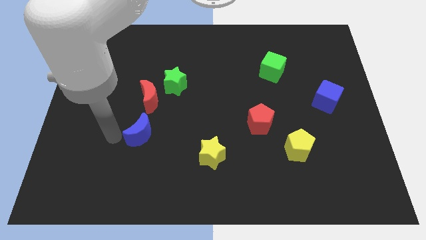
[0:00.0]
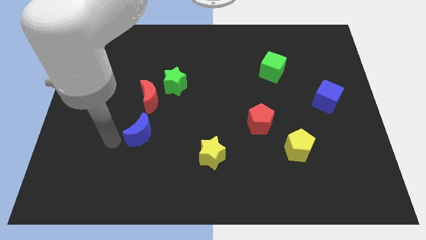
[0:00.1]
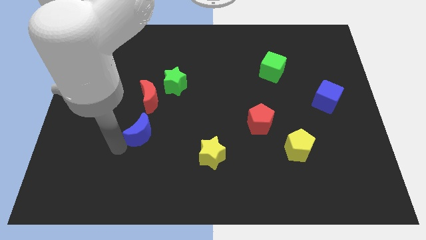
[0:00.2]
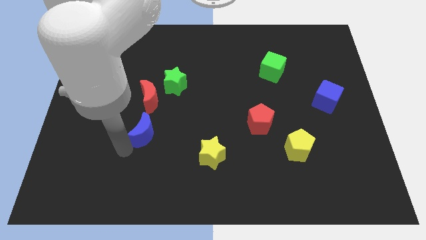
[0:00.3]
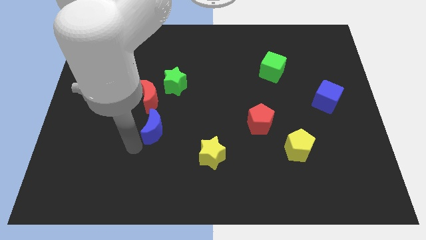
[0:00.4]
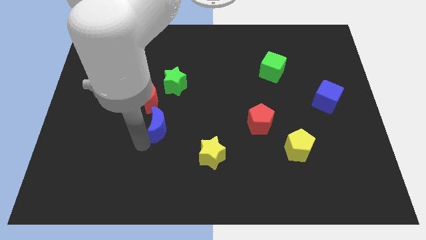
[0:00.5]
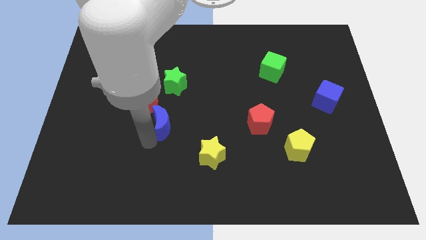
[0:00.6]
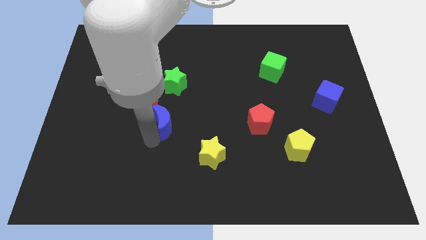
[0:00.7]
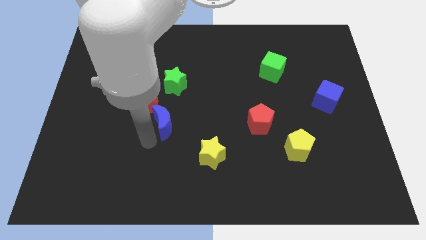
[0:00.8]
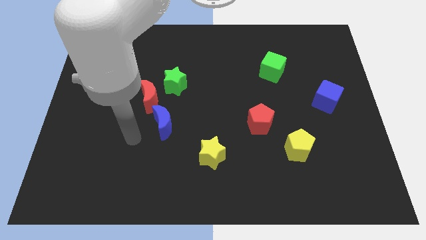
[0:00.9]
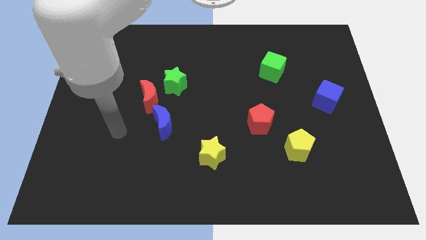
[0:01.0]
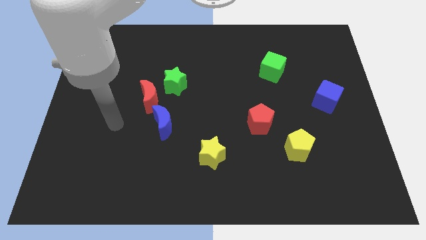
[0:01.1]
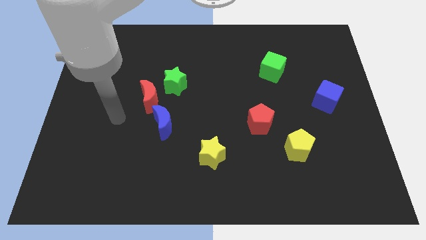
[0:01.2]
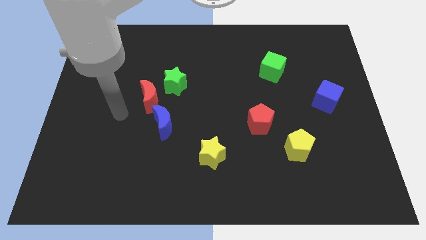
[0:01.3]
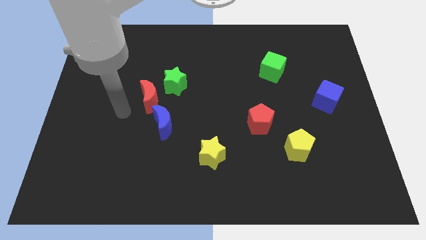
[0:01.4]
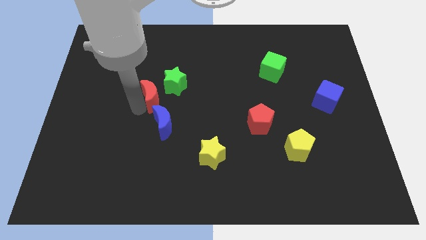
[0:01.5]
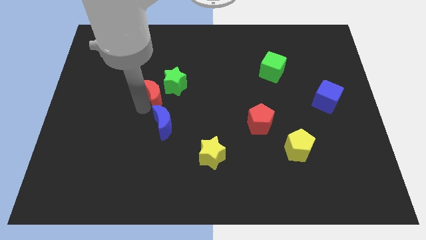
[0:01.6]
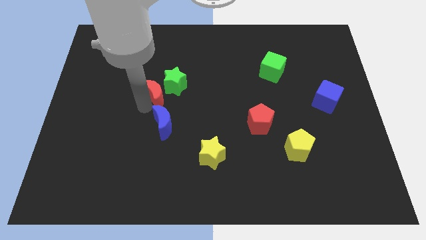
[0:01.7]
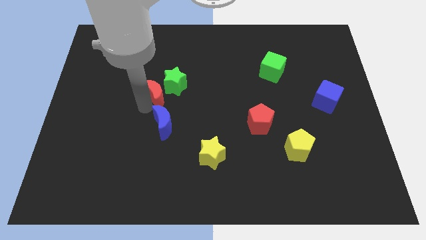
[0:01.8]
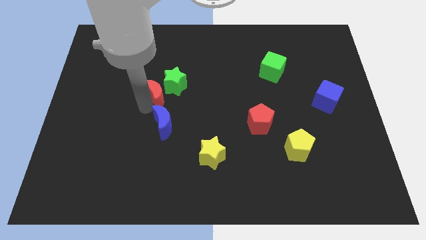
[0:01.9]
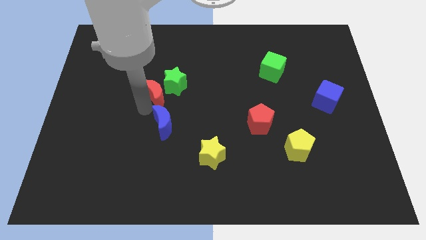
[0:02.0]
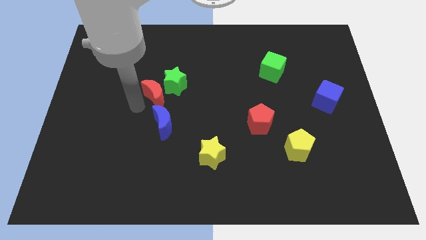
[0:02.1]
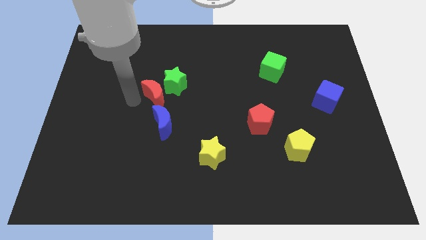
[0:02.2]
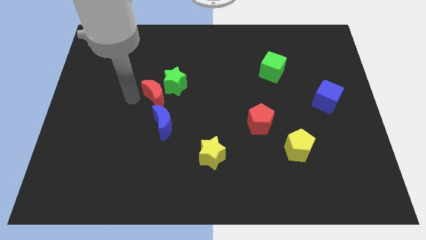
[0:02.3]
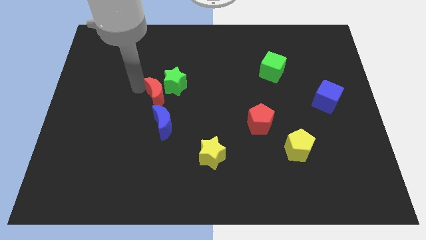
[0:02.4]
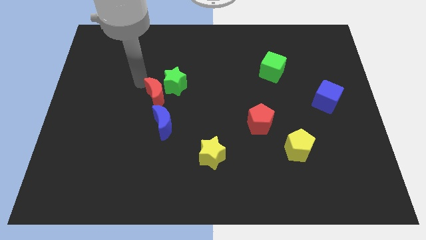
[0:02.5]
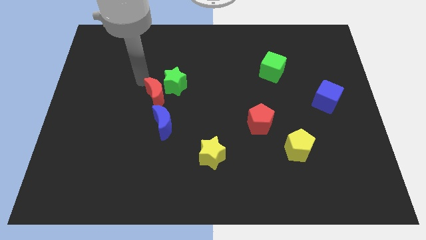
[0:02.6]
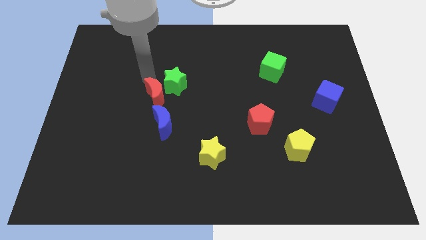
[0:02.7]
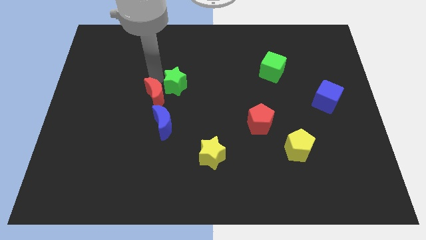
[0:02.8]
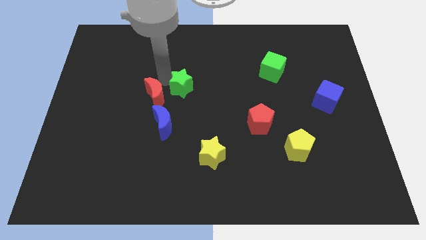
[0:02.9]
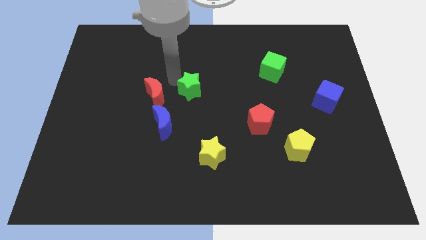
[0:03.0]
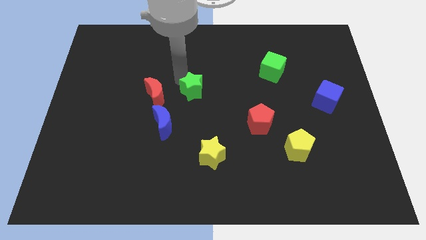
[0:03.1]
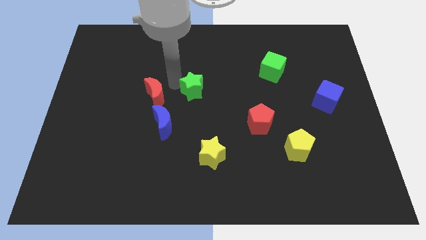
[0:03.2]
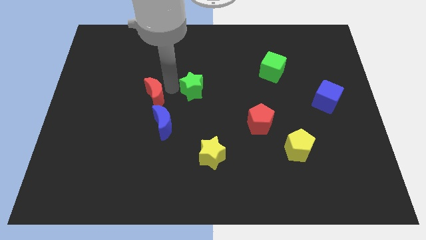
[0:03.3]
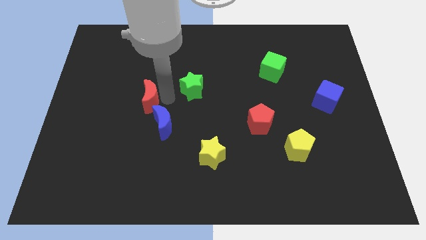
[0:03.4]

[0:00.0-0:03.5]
place the blue moon at the bottom side of red moon

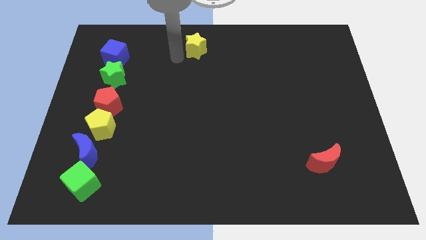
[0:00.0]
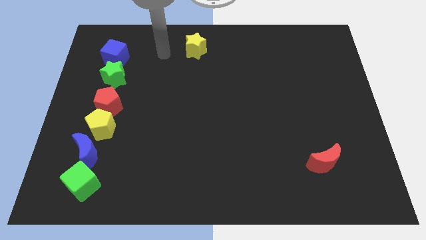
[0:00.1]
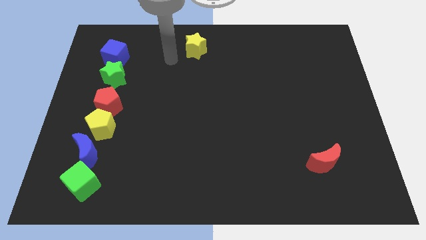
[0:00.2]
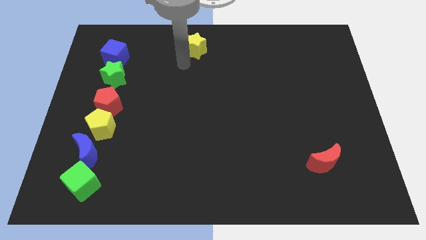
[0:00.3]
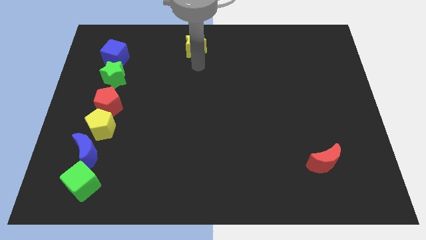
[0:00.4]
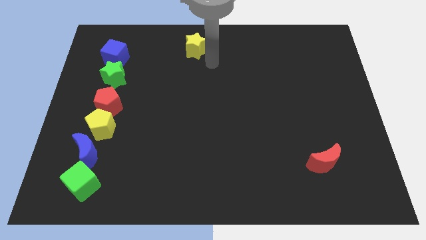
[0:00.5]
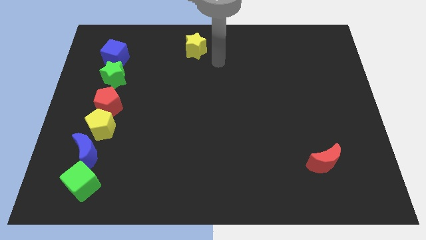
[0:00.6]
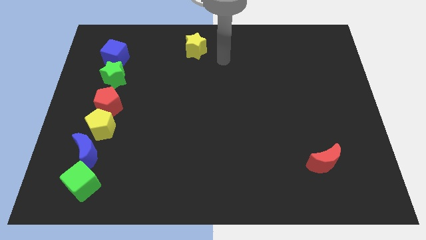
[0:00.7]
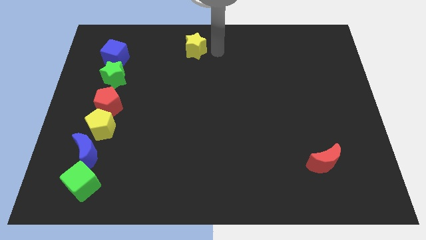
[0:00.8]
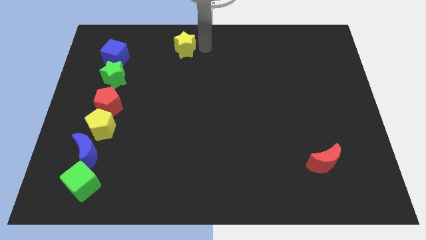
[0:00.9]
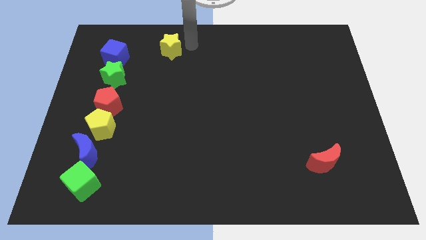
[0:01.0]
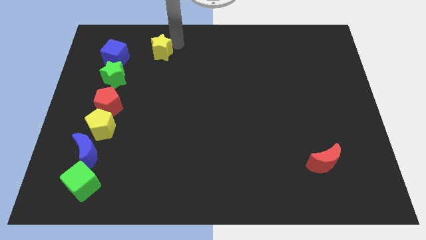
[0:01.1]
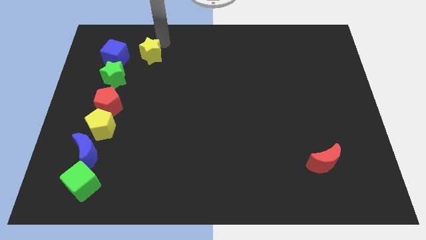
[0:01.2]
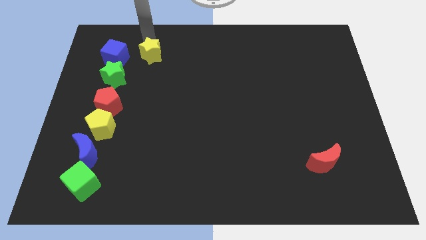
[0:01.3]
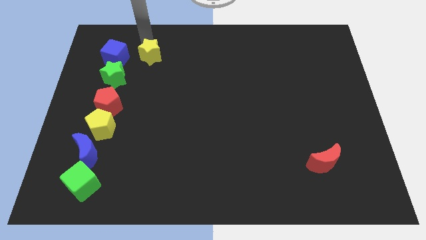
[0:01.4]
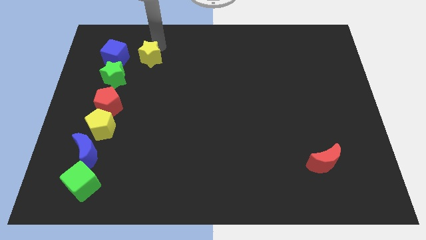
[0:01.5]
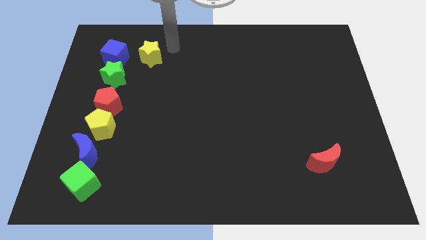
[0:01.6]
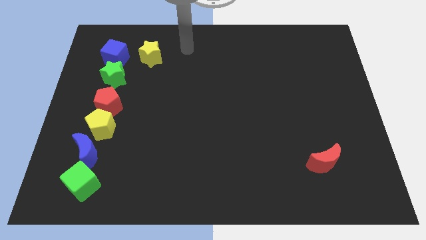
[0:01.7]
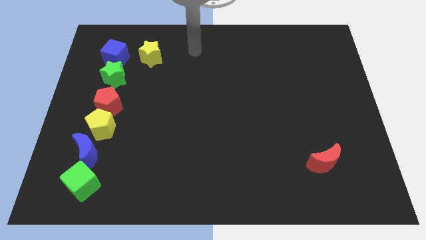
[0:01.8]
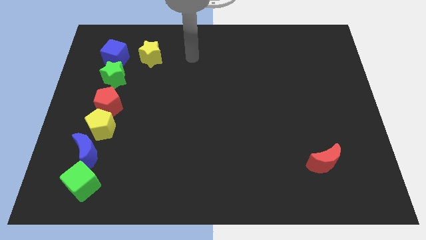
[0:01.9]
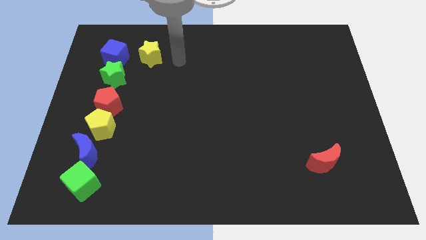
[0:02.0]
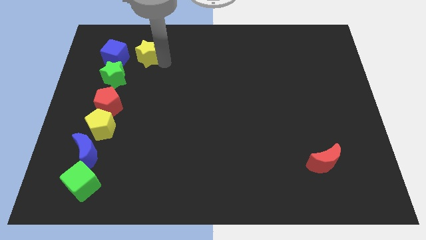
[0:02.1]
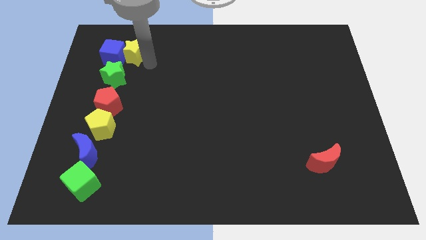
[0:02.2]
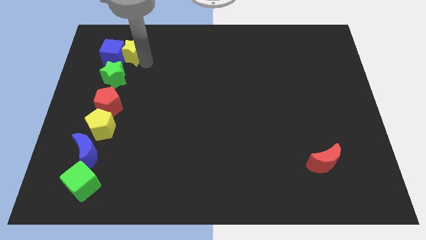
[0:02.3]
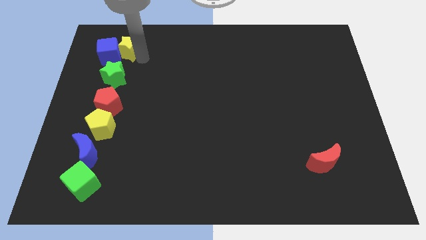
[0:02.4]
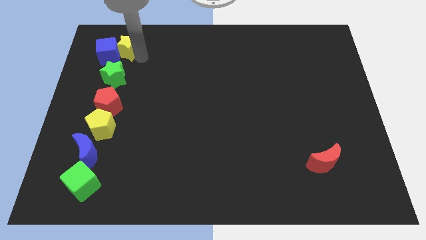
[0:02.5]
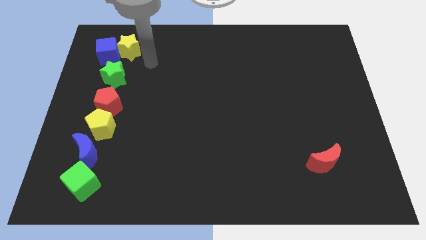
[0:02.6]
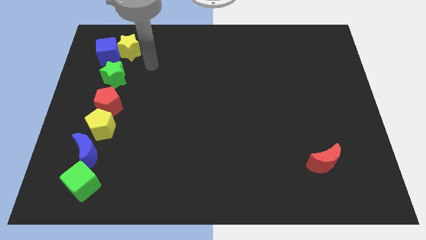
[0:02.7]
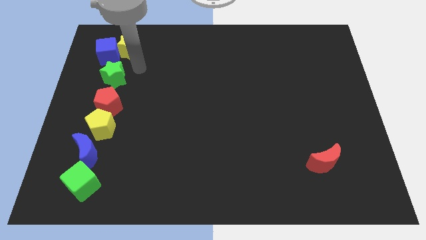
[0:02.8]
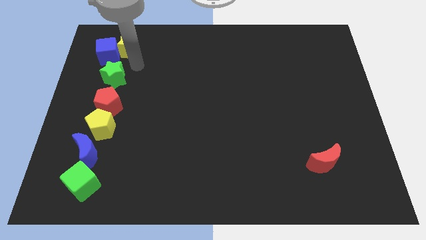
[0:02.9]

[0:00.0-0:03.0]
push the yellow star into the blue cube

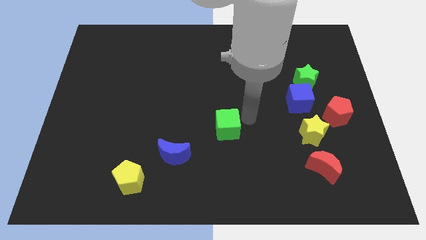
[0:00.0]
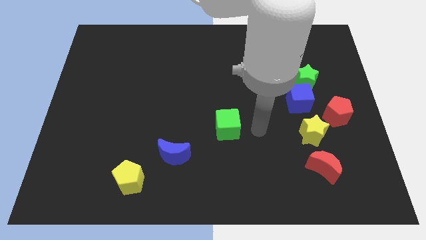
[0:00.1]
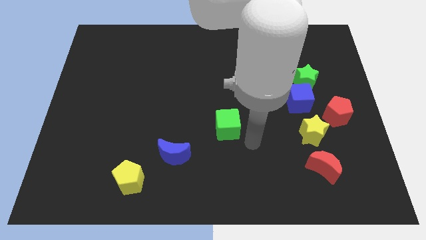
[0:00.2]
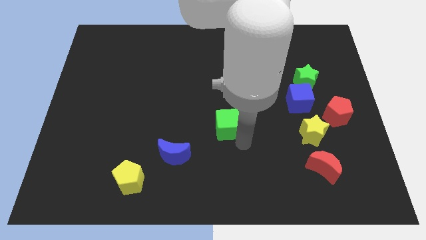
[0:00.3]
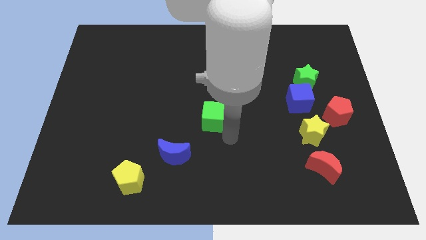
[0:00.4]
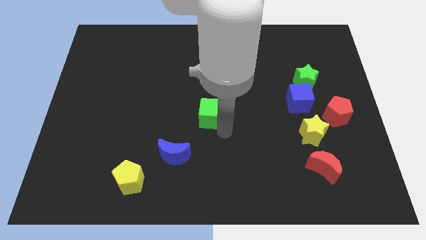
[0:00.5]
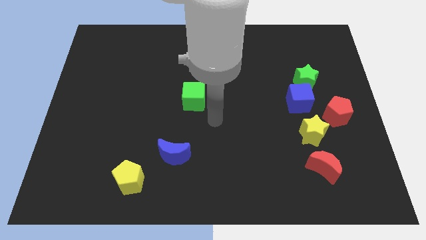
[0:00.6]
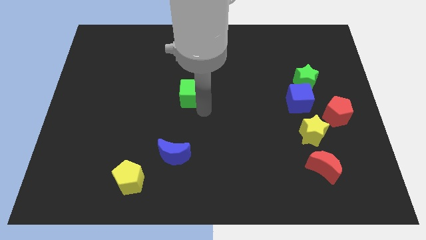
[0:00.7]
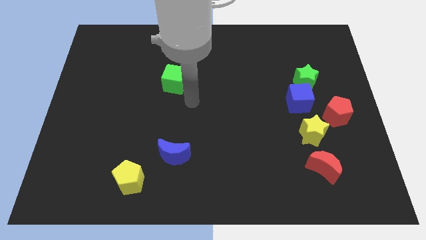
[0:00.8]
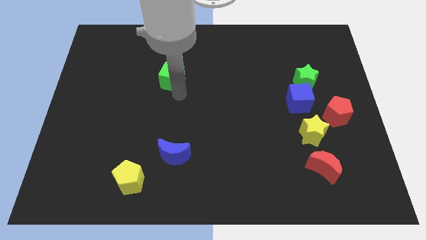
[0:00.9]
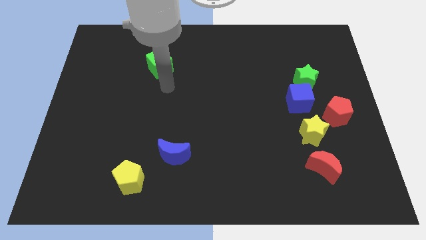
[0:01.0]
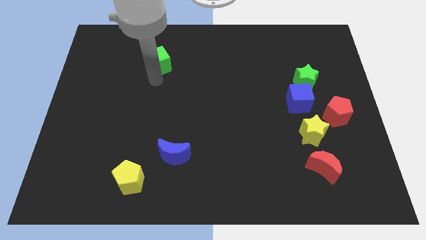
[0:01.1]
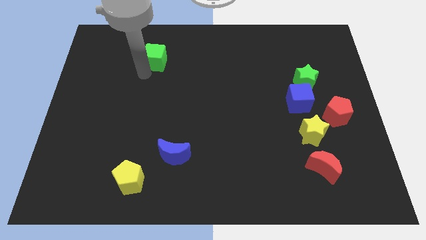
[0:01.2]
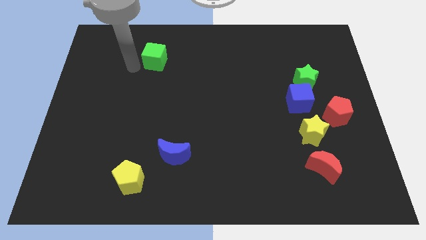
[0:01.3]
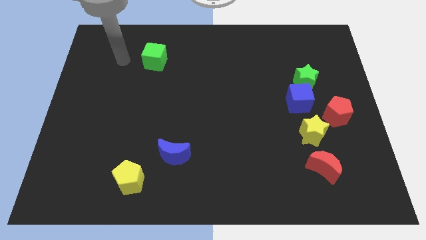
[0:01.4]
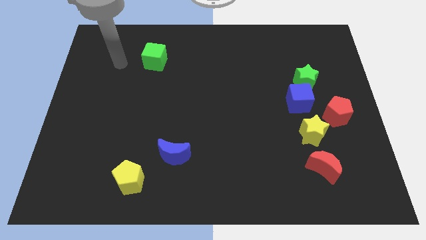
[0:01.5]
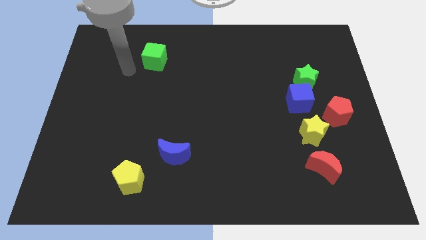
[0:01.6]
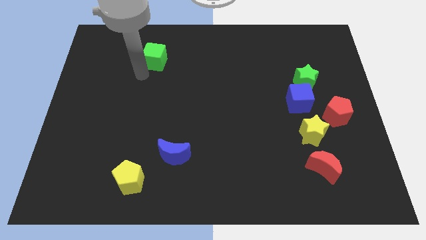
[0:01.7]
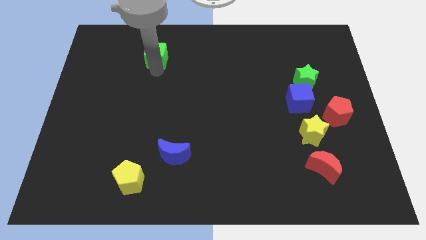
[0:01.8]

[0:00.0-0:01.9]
move the green cube to the left top of the board

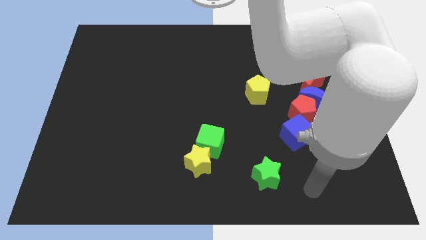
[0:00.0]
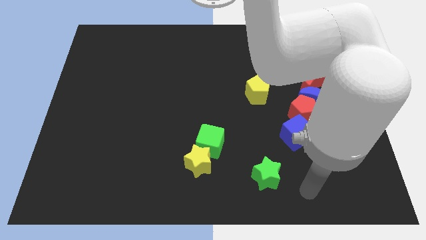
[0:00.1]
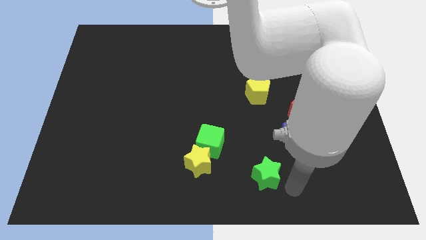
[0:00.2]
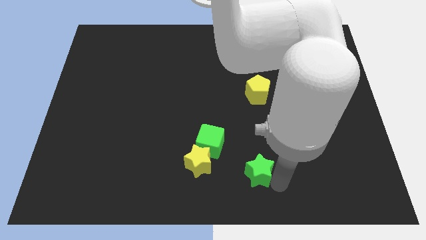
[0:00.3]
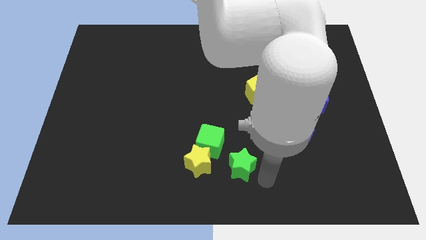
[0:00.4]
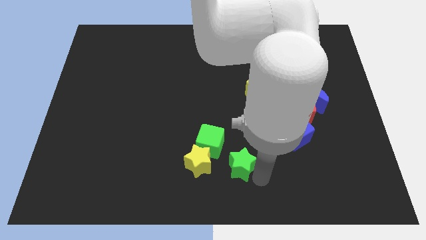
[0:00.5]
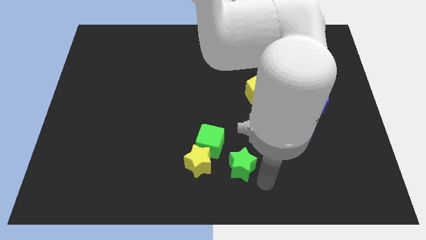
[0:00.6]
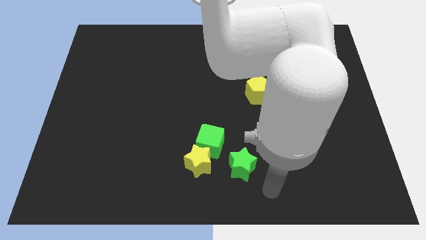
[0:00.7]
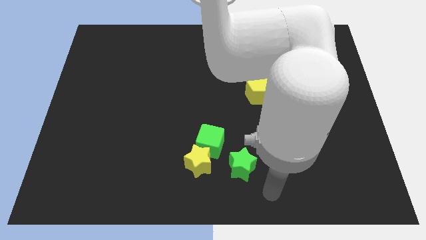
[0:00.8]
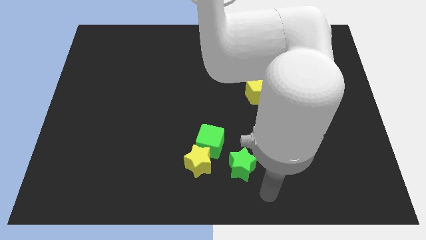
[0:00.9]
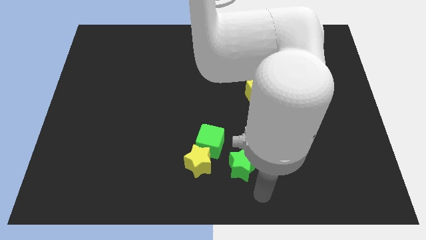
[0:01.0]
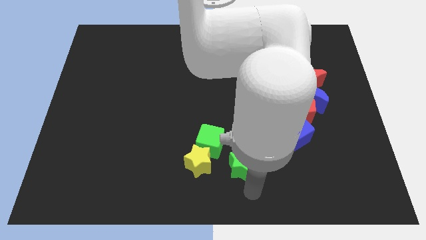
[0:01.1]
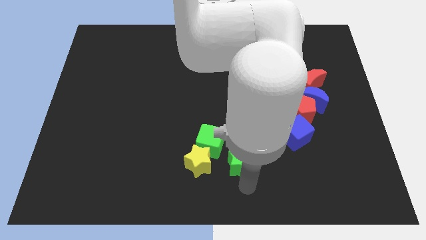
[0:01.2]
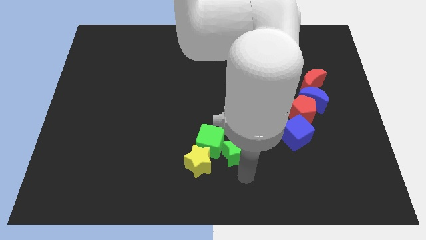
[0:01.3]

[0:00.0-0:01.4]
push the green star into the green cube
